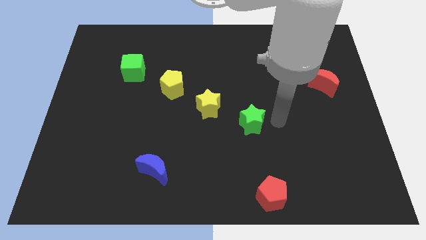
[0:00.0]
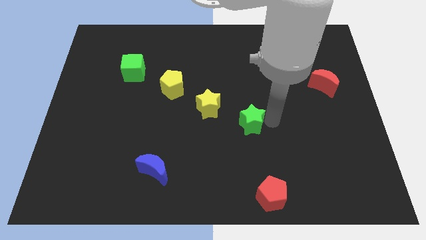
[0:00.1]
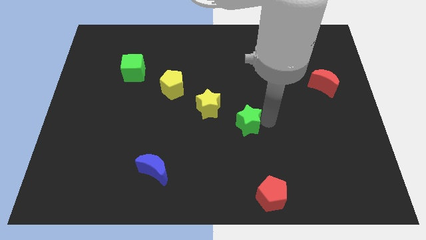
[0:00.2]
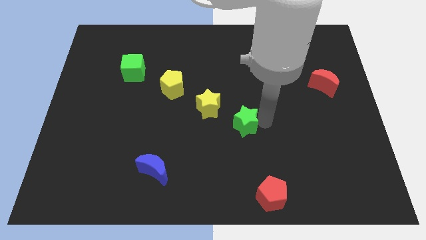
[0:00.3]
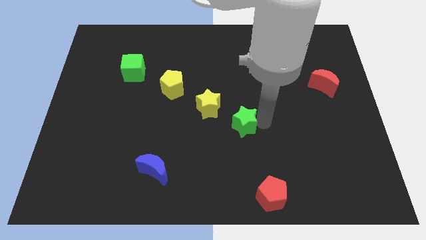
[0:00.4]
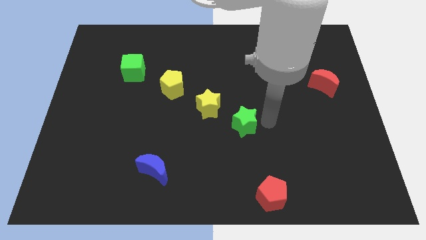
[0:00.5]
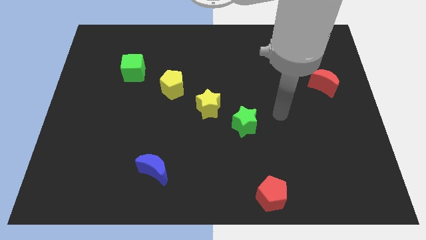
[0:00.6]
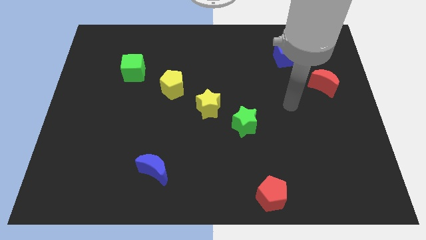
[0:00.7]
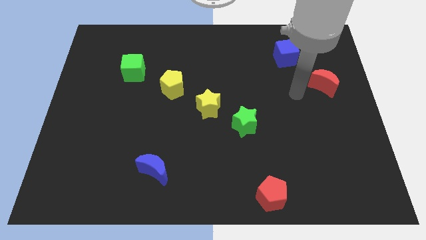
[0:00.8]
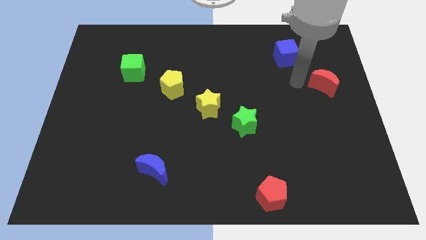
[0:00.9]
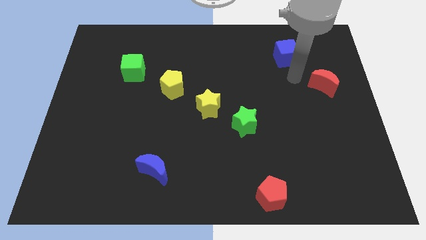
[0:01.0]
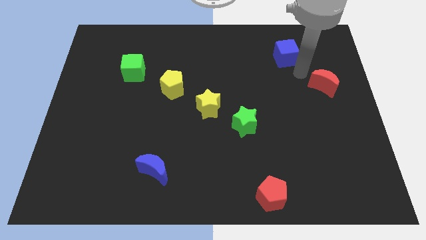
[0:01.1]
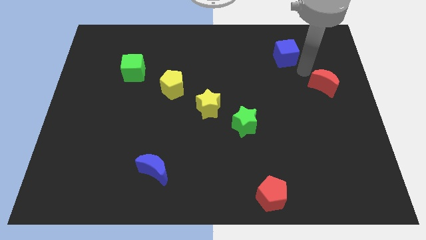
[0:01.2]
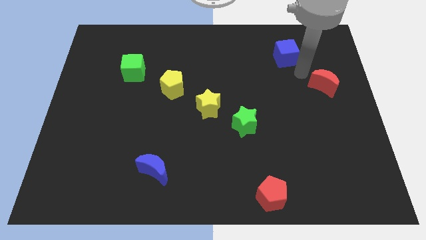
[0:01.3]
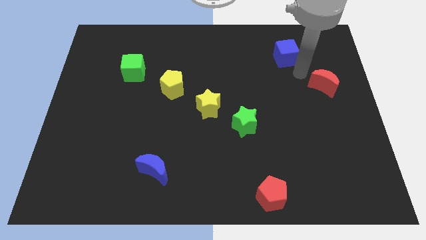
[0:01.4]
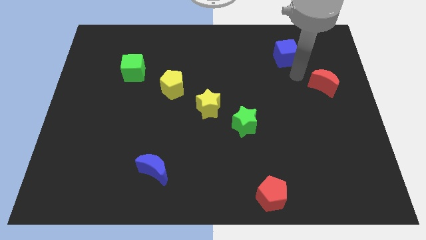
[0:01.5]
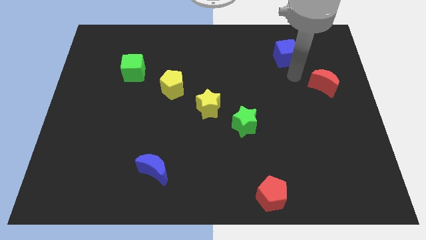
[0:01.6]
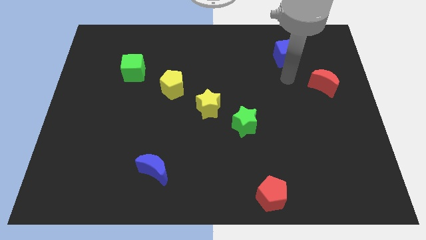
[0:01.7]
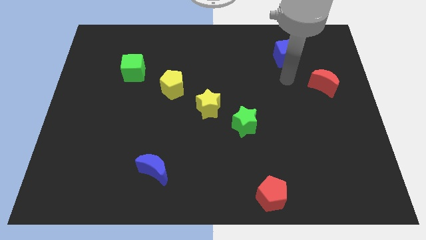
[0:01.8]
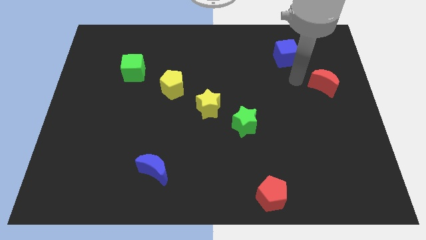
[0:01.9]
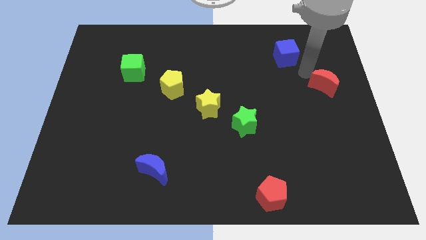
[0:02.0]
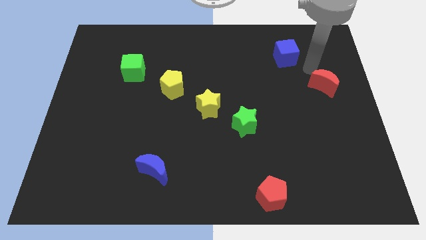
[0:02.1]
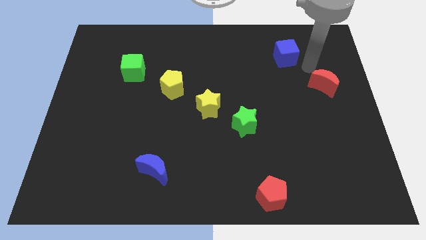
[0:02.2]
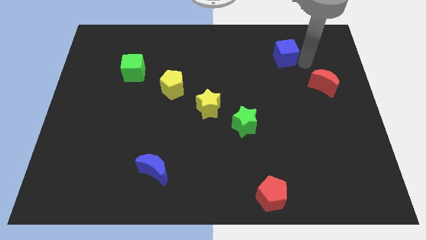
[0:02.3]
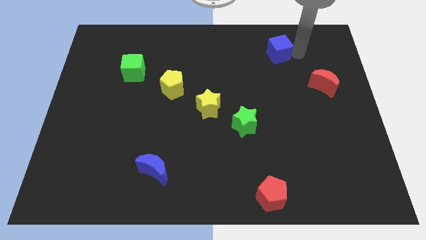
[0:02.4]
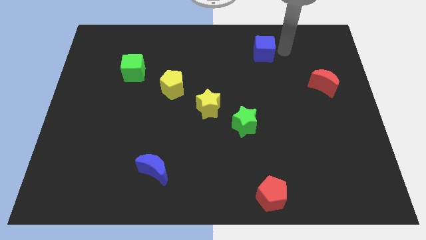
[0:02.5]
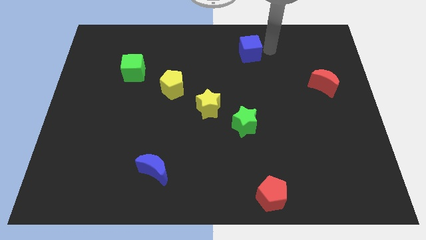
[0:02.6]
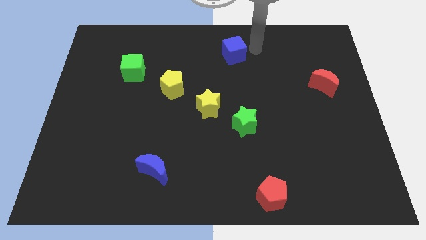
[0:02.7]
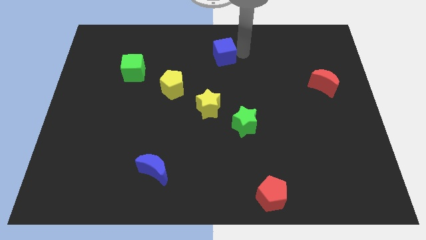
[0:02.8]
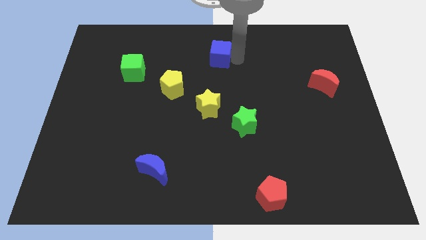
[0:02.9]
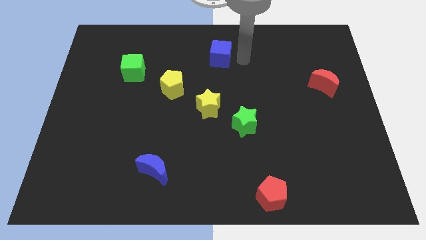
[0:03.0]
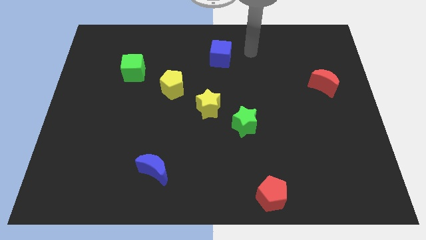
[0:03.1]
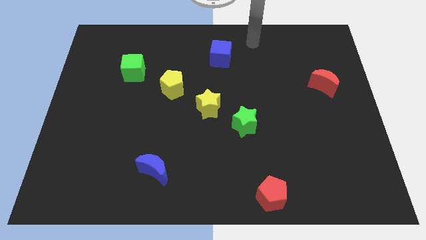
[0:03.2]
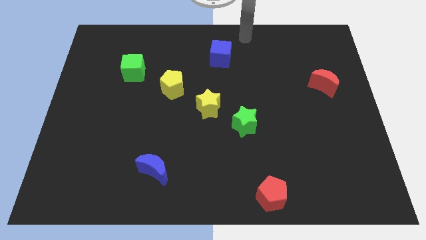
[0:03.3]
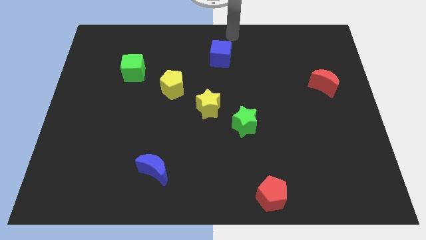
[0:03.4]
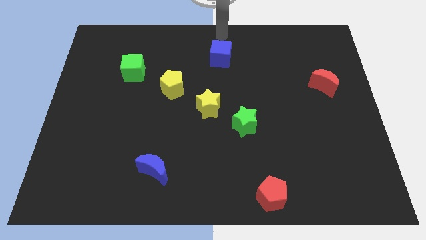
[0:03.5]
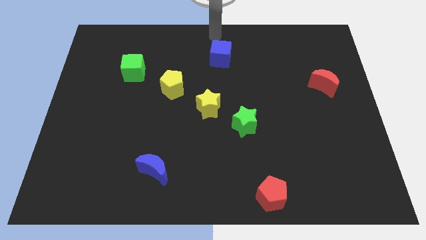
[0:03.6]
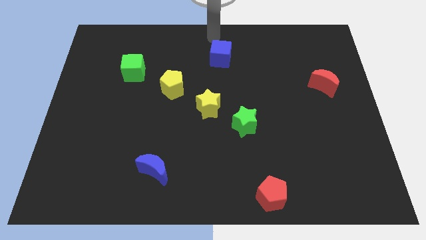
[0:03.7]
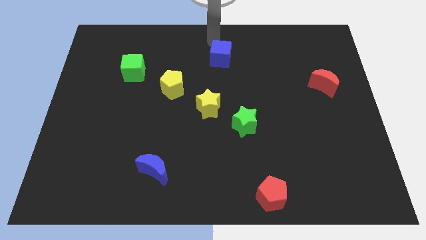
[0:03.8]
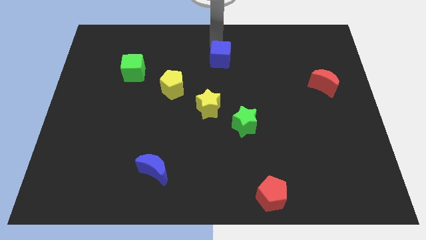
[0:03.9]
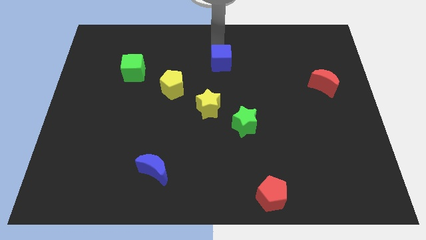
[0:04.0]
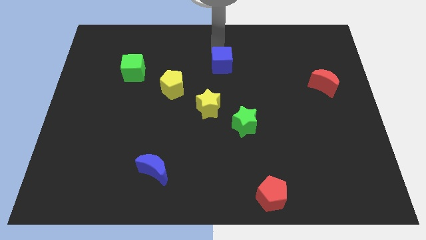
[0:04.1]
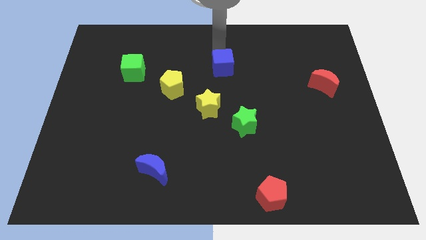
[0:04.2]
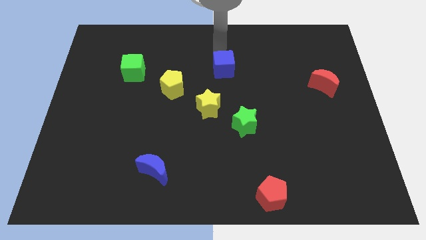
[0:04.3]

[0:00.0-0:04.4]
place green star right to yellow star

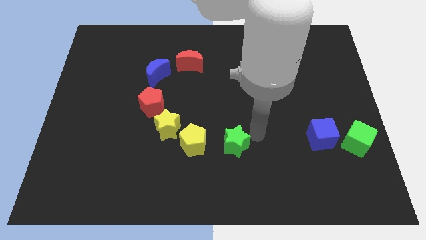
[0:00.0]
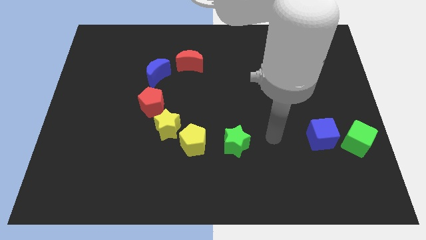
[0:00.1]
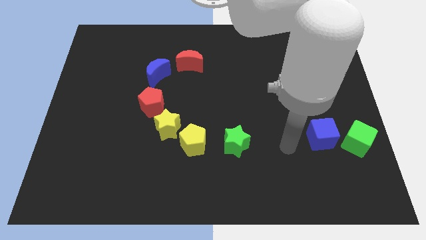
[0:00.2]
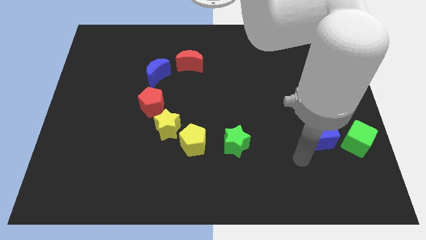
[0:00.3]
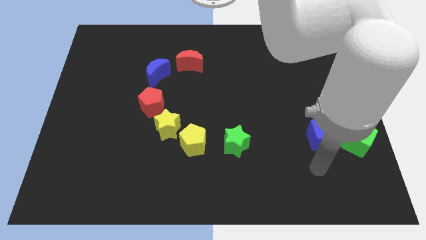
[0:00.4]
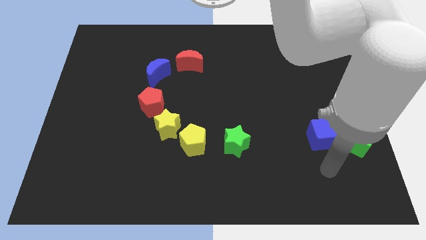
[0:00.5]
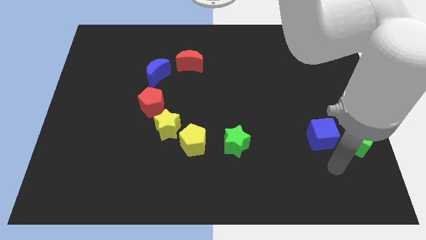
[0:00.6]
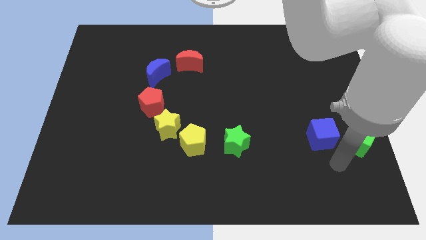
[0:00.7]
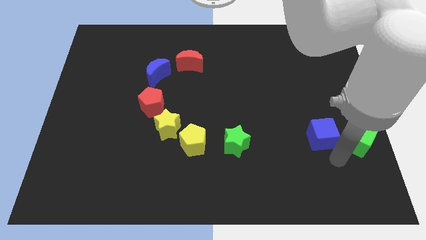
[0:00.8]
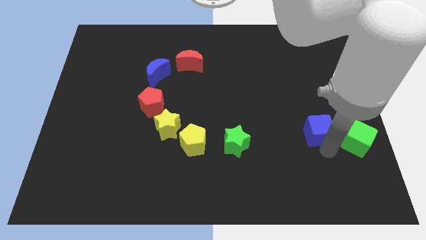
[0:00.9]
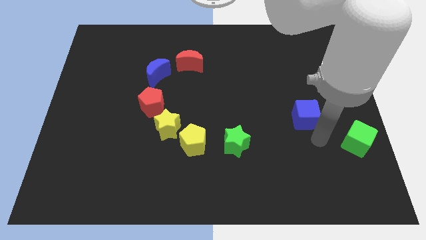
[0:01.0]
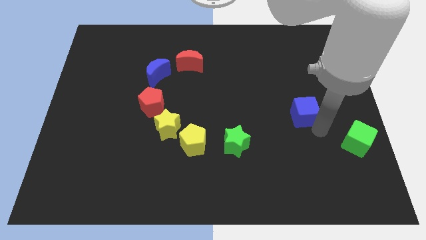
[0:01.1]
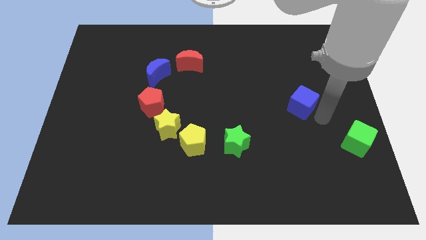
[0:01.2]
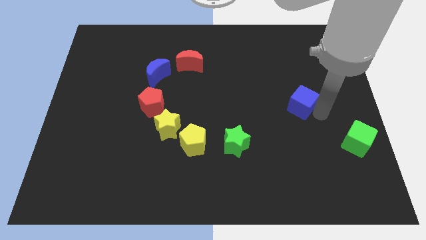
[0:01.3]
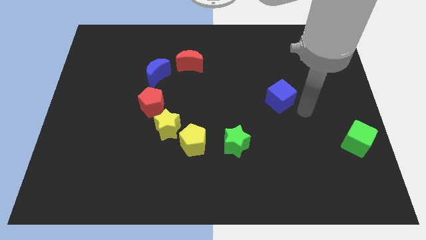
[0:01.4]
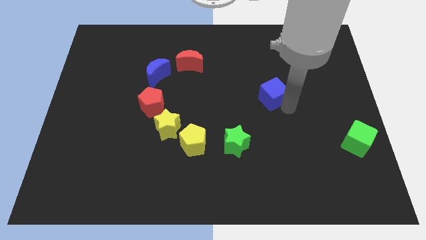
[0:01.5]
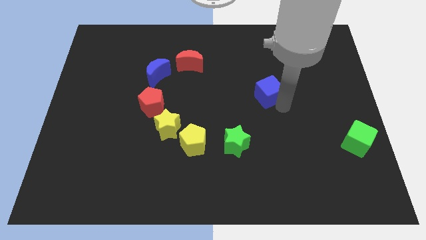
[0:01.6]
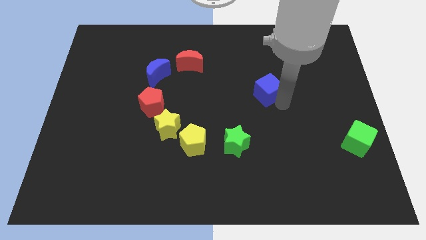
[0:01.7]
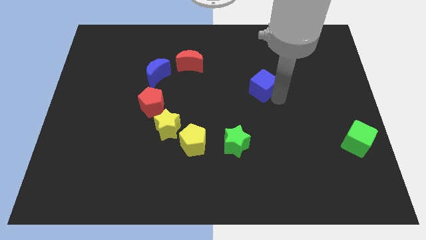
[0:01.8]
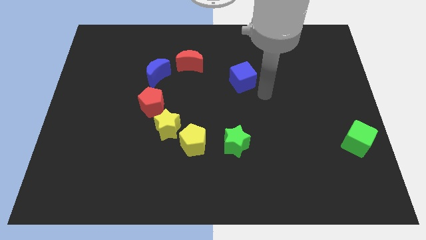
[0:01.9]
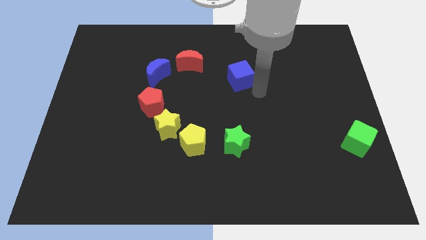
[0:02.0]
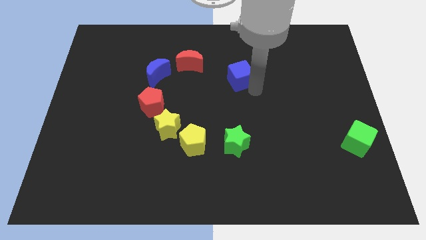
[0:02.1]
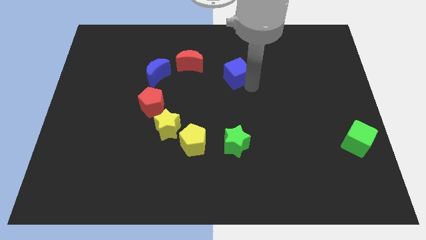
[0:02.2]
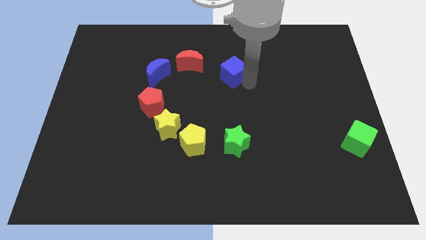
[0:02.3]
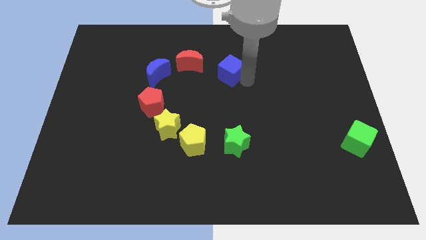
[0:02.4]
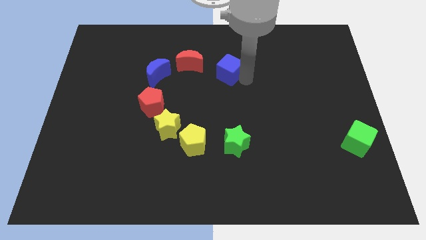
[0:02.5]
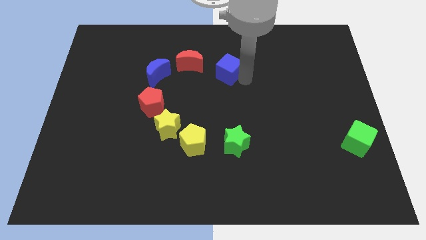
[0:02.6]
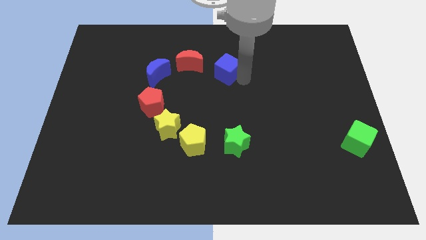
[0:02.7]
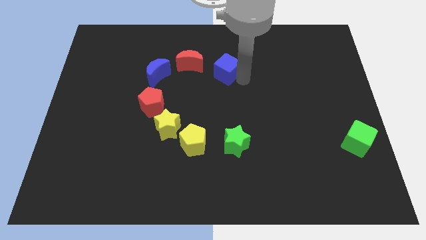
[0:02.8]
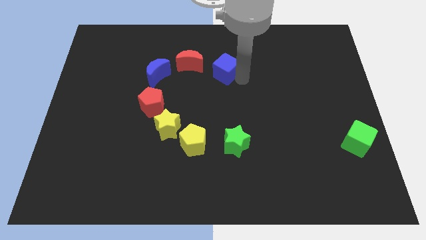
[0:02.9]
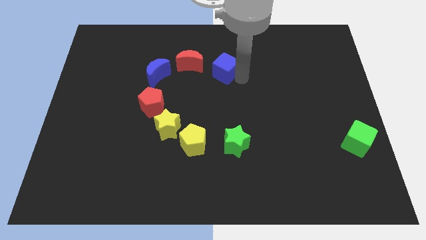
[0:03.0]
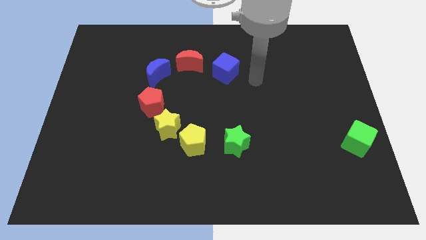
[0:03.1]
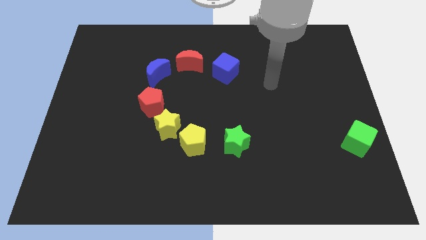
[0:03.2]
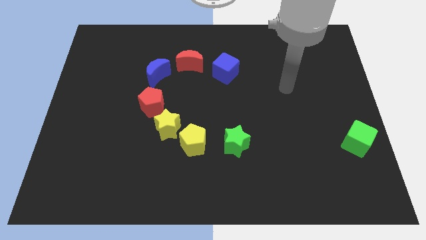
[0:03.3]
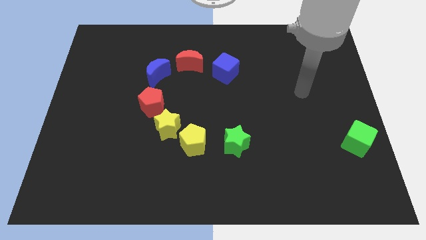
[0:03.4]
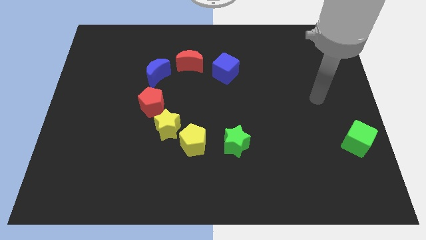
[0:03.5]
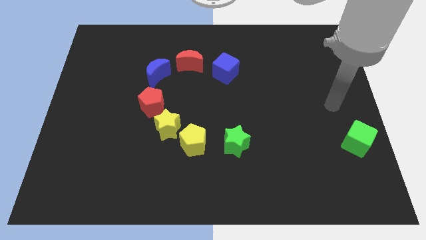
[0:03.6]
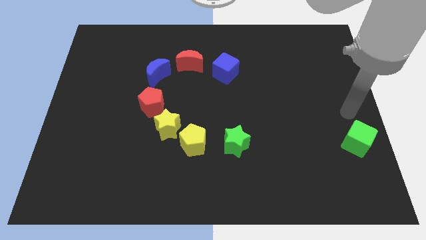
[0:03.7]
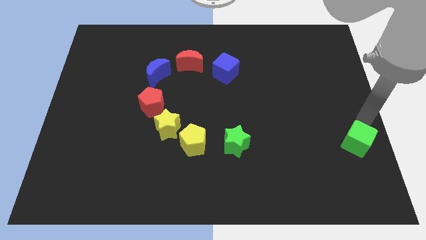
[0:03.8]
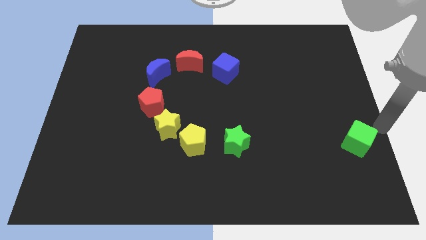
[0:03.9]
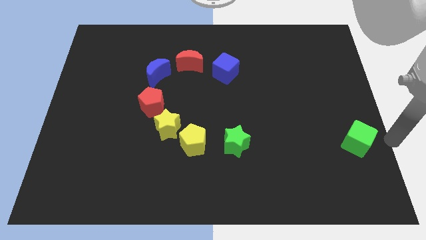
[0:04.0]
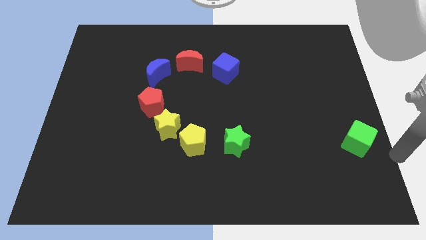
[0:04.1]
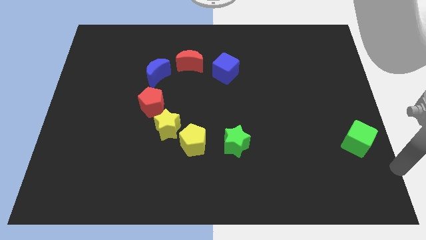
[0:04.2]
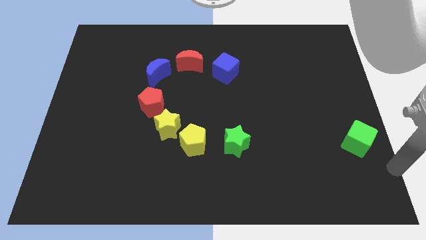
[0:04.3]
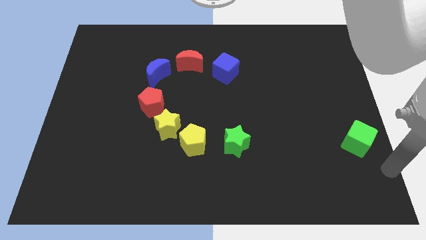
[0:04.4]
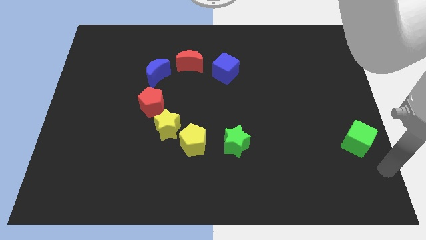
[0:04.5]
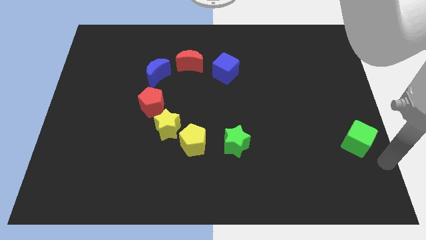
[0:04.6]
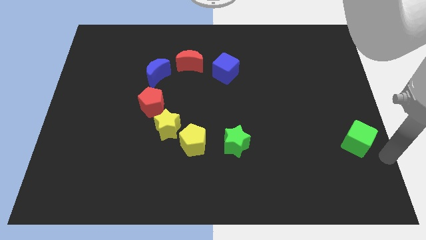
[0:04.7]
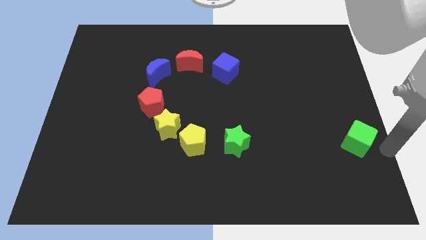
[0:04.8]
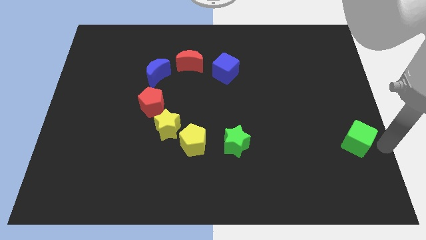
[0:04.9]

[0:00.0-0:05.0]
push the blue cube to the right of the red crescent
